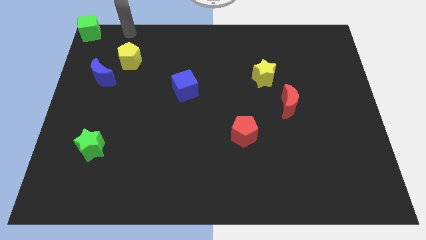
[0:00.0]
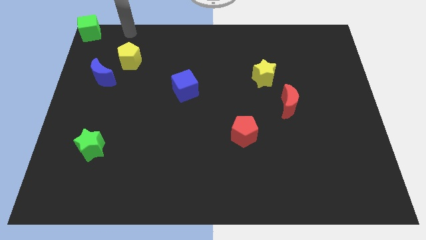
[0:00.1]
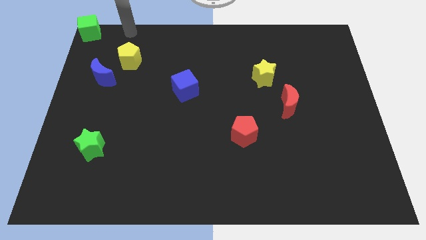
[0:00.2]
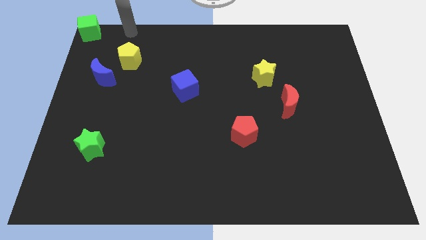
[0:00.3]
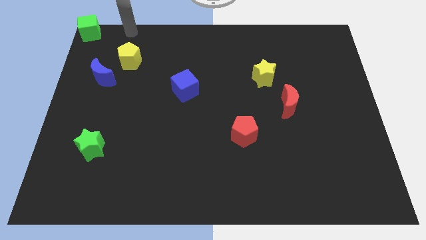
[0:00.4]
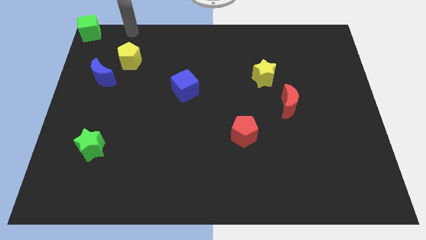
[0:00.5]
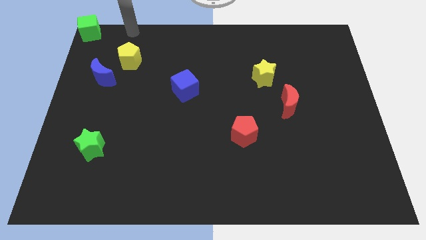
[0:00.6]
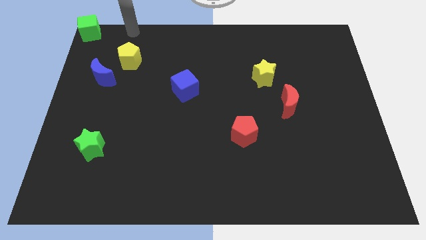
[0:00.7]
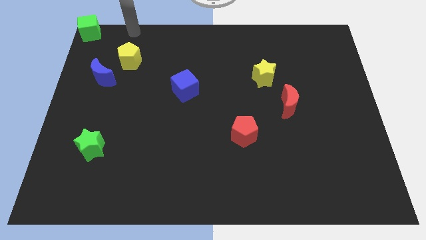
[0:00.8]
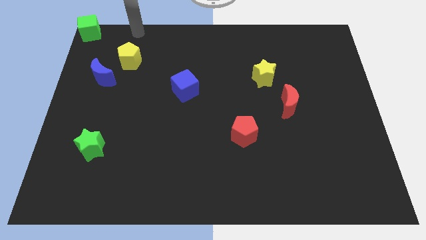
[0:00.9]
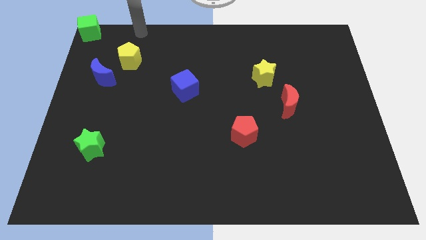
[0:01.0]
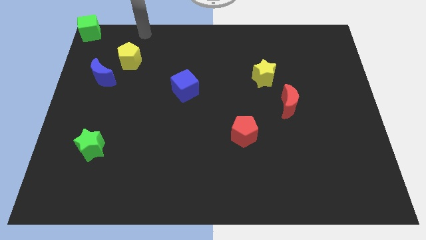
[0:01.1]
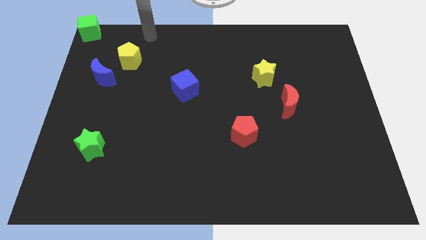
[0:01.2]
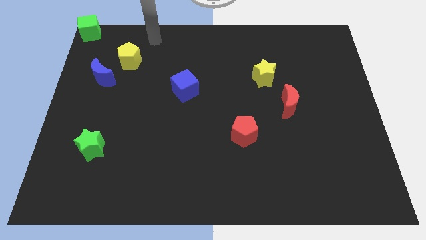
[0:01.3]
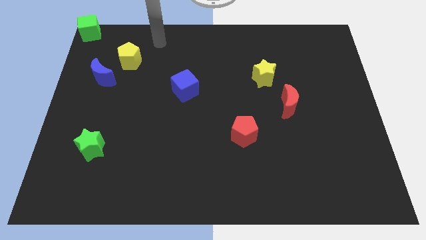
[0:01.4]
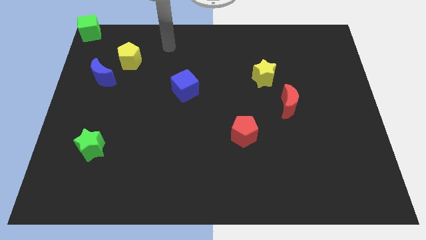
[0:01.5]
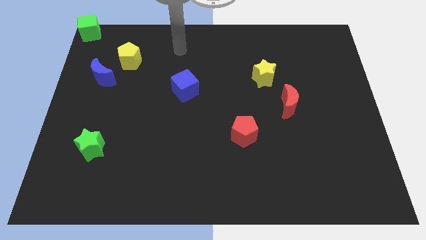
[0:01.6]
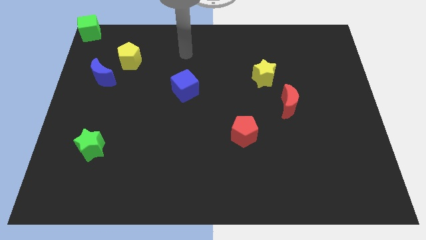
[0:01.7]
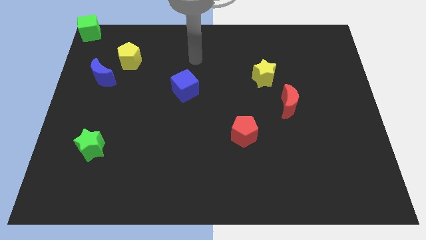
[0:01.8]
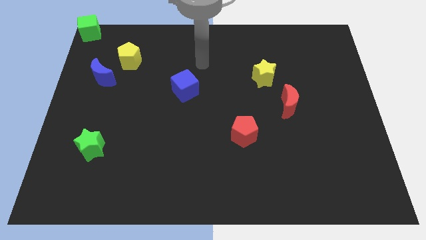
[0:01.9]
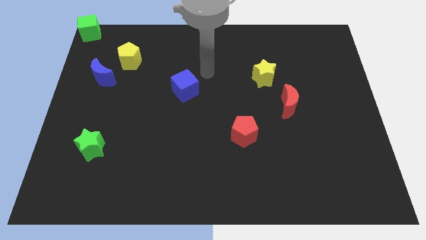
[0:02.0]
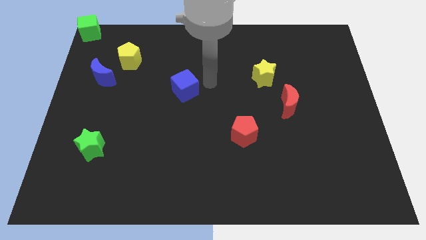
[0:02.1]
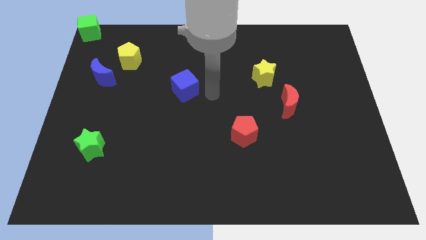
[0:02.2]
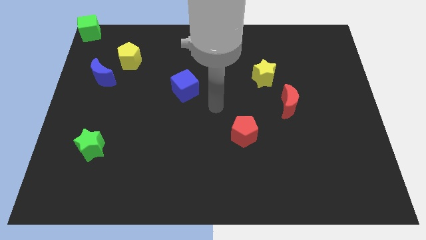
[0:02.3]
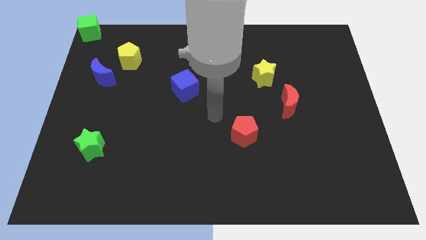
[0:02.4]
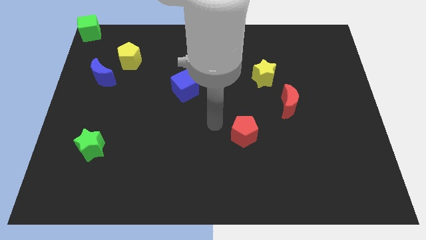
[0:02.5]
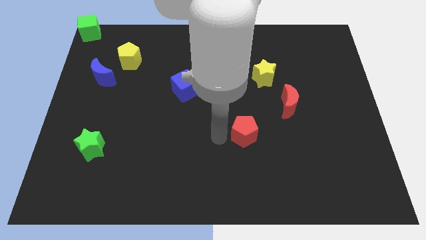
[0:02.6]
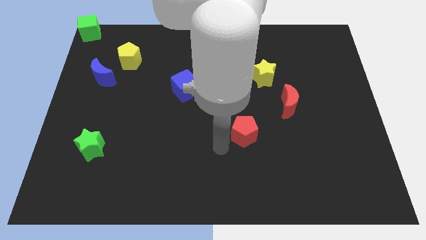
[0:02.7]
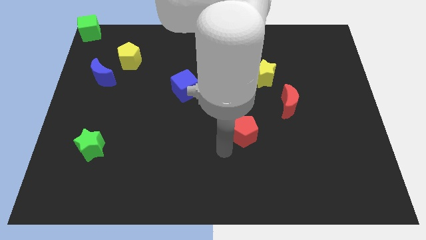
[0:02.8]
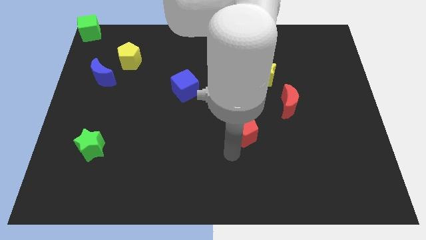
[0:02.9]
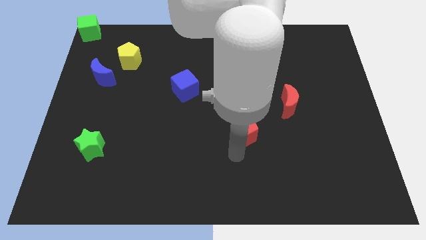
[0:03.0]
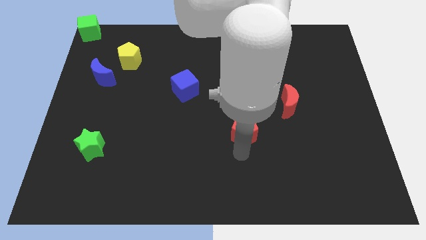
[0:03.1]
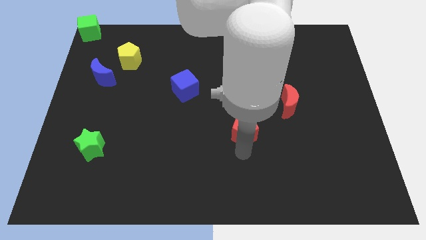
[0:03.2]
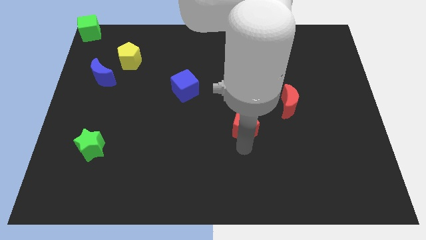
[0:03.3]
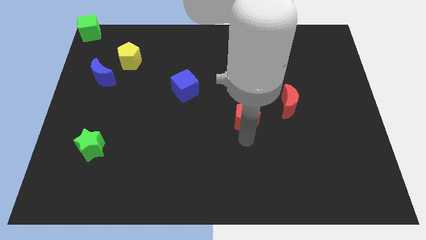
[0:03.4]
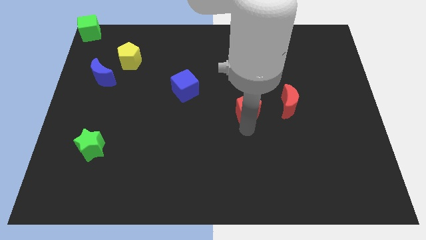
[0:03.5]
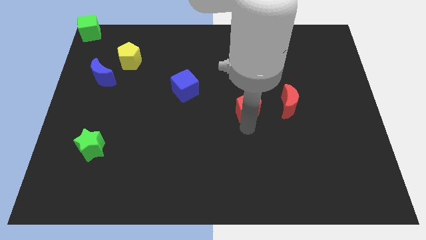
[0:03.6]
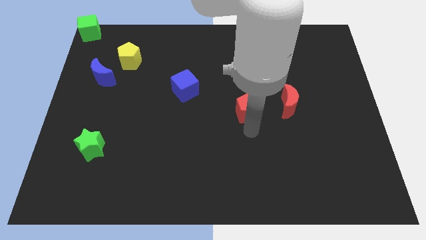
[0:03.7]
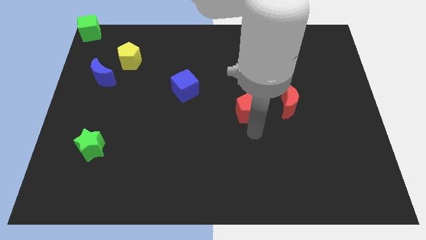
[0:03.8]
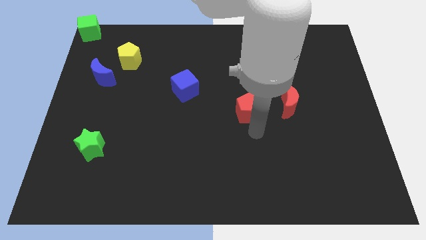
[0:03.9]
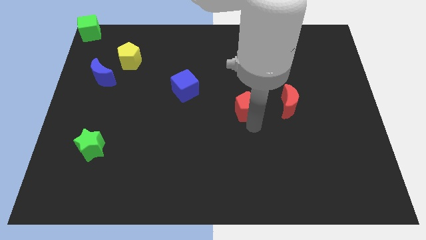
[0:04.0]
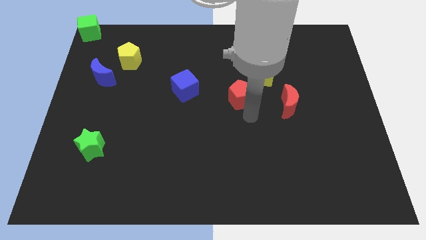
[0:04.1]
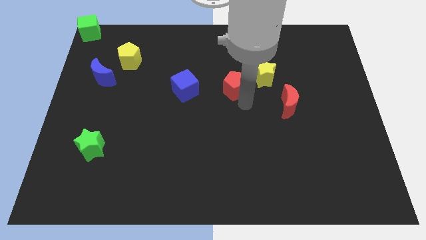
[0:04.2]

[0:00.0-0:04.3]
place the red pentagon in between the yellow star and blue cube

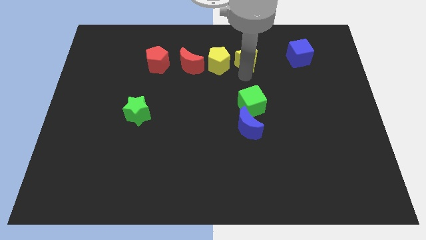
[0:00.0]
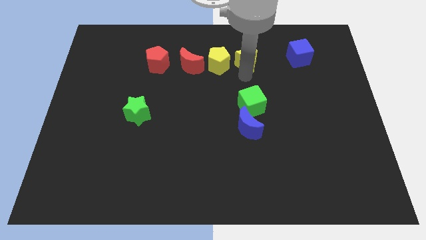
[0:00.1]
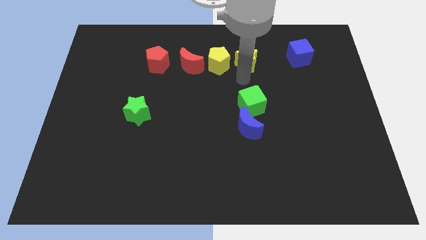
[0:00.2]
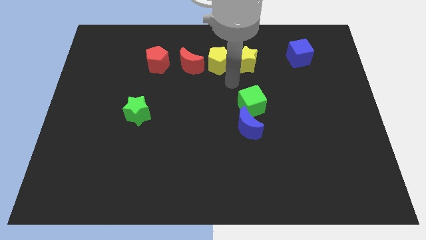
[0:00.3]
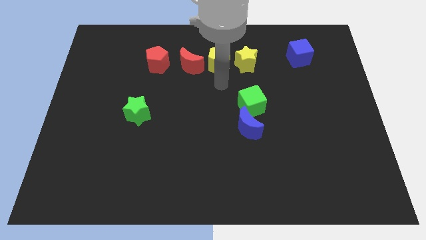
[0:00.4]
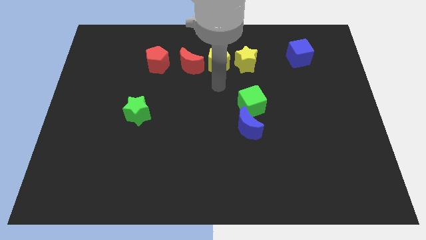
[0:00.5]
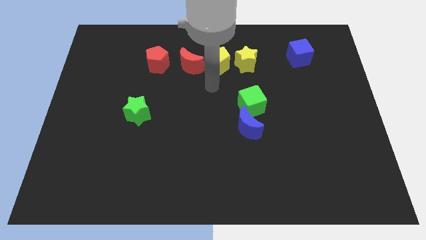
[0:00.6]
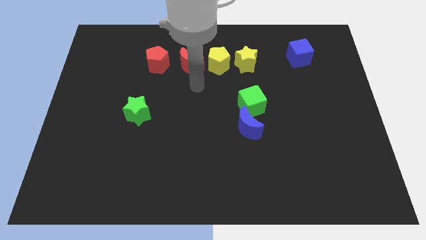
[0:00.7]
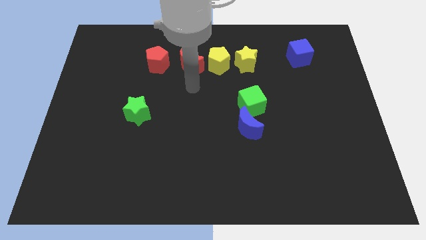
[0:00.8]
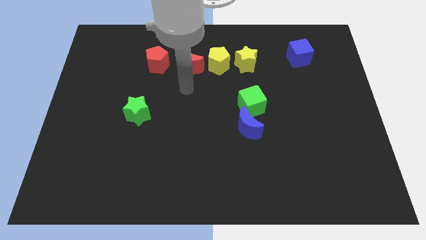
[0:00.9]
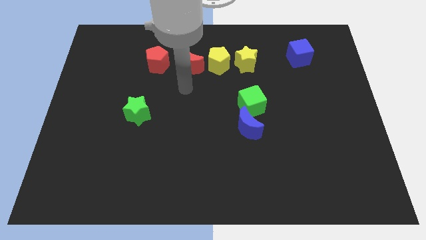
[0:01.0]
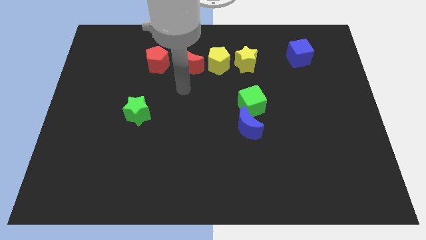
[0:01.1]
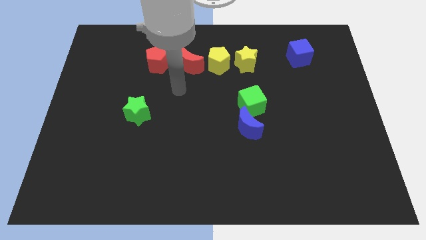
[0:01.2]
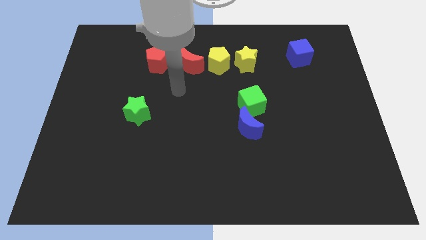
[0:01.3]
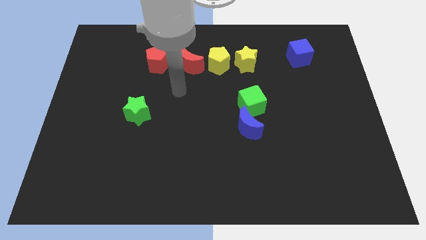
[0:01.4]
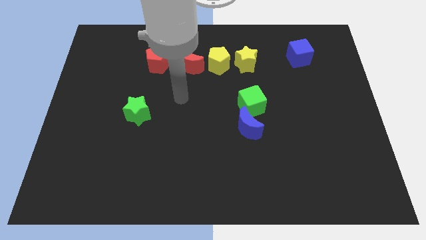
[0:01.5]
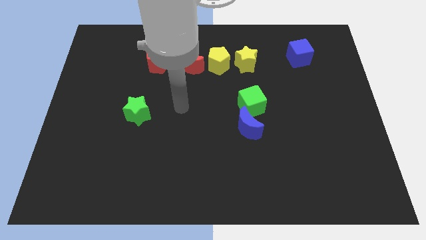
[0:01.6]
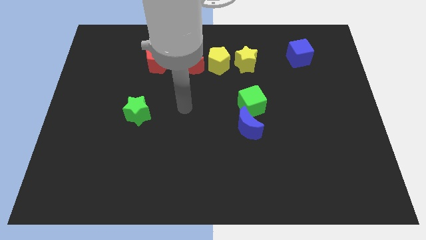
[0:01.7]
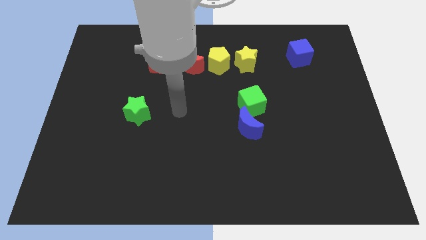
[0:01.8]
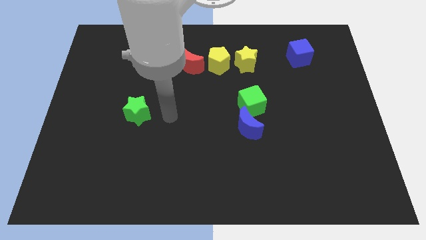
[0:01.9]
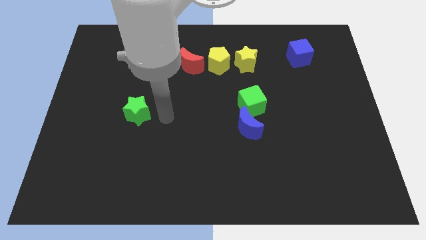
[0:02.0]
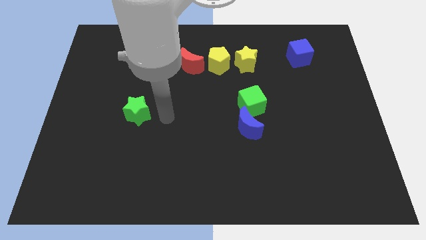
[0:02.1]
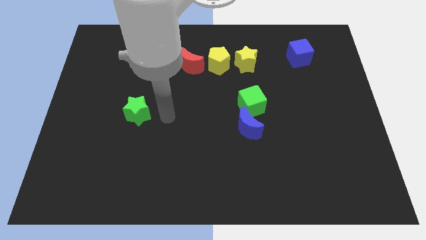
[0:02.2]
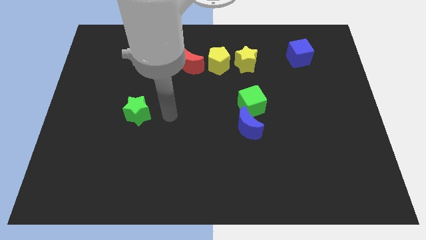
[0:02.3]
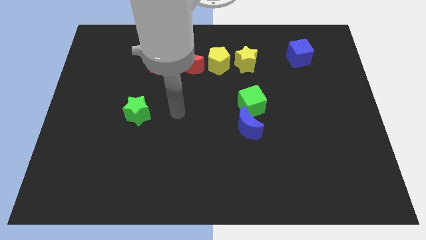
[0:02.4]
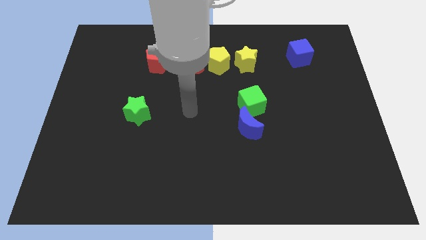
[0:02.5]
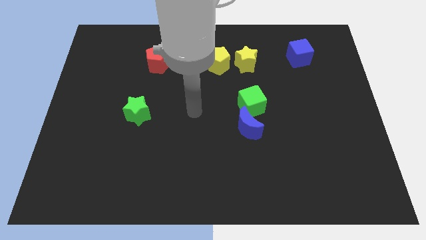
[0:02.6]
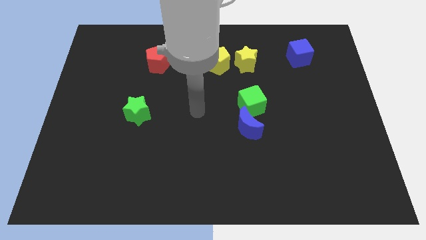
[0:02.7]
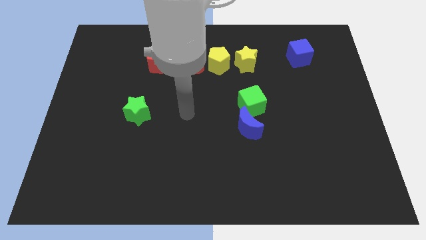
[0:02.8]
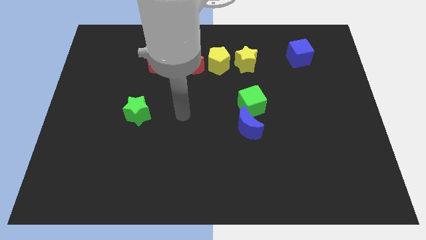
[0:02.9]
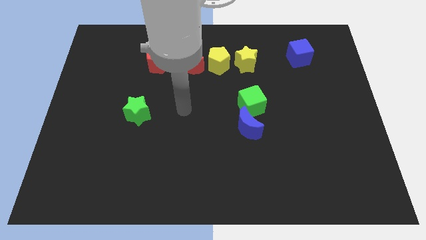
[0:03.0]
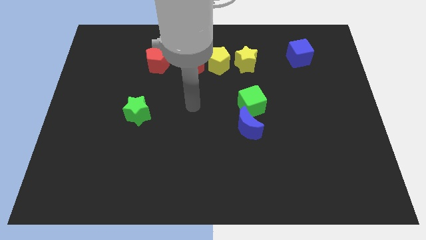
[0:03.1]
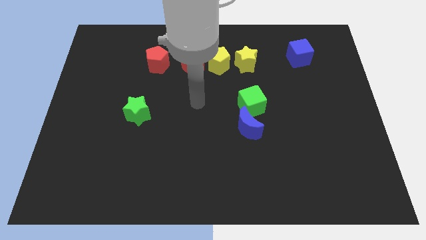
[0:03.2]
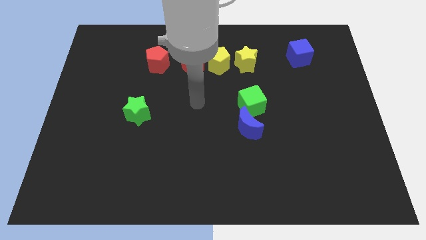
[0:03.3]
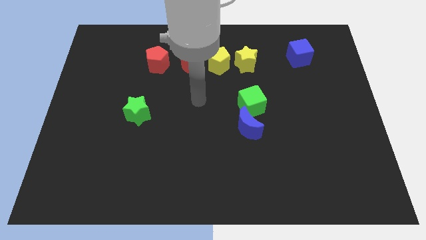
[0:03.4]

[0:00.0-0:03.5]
place your arm below the red moon

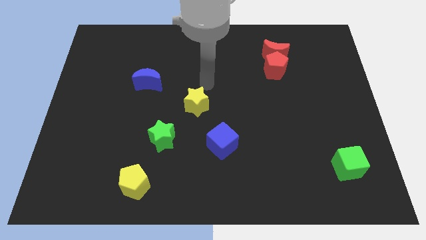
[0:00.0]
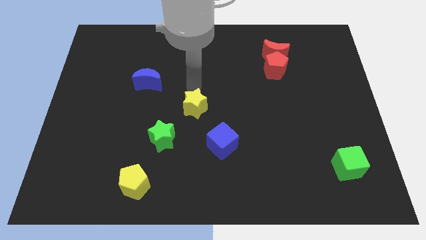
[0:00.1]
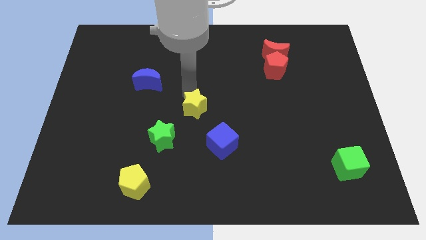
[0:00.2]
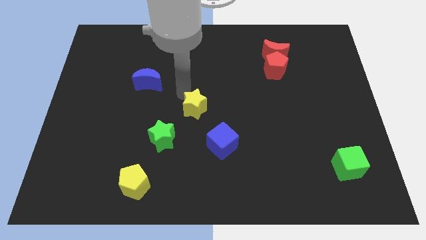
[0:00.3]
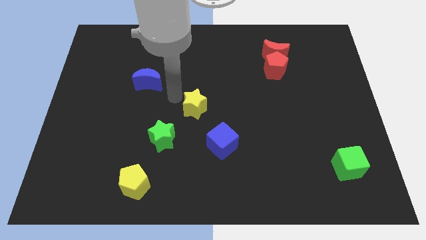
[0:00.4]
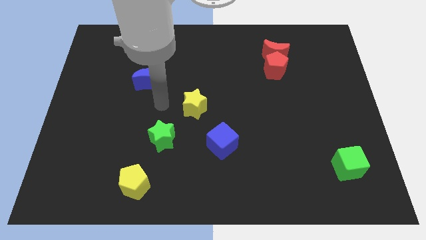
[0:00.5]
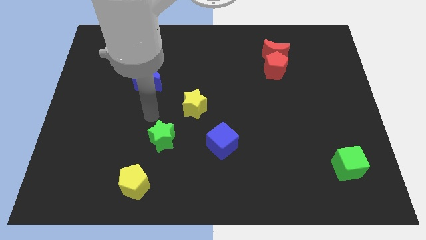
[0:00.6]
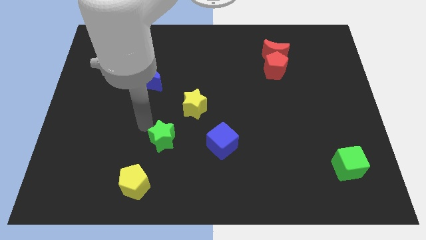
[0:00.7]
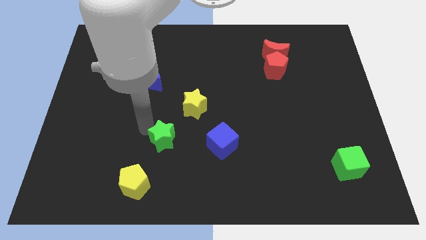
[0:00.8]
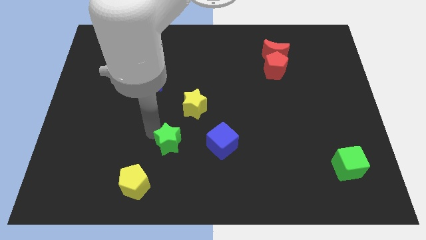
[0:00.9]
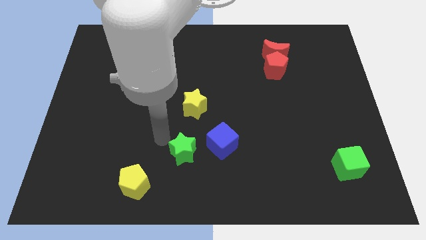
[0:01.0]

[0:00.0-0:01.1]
push the green star towards the blue cube
